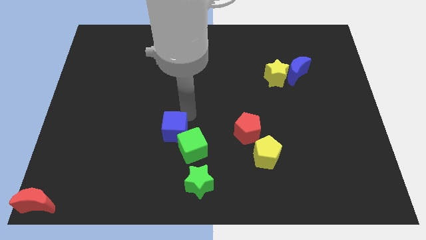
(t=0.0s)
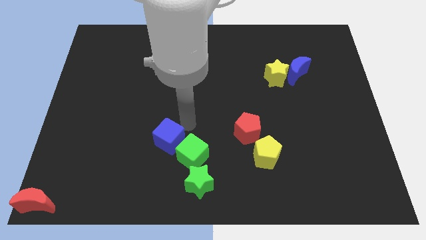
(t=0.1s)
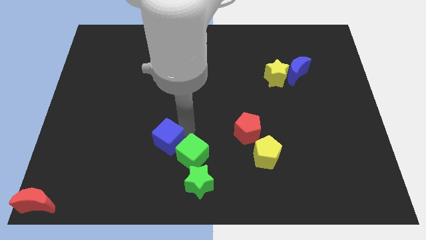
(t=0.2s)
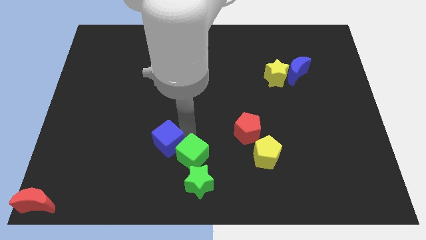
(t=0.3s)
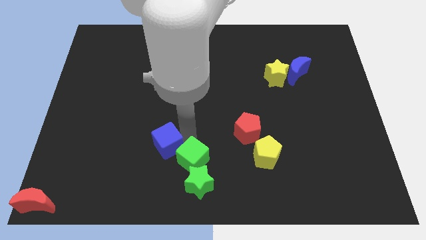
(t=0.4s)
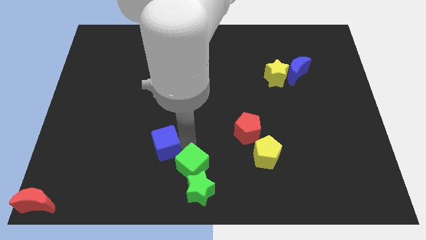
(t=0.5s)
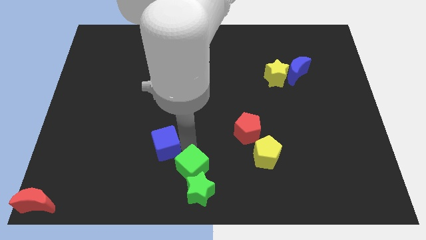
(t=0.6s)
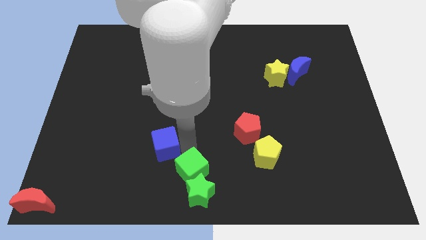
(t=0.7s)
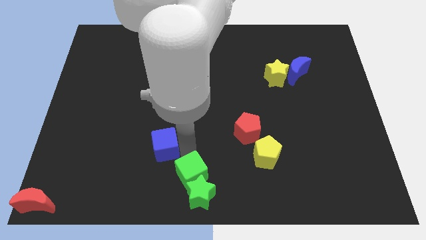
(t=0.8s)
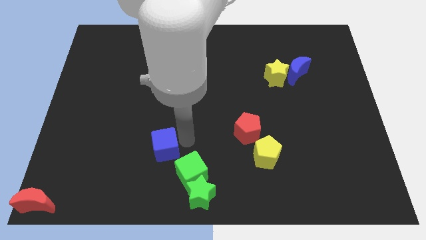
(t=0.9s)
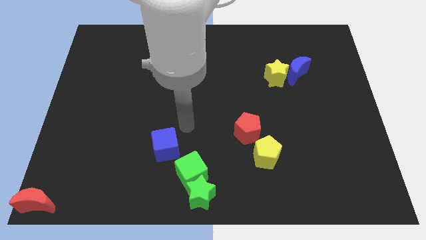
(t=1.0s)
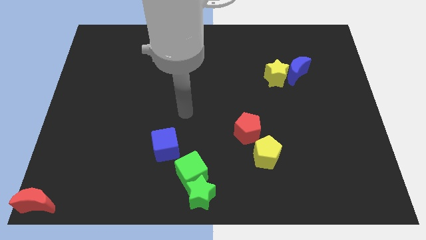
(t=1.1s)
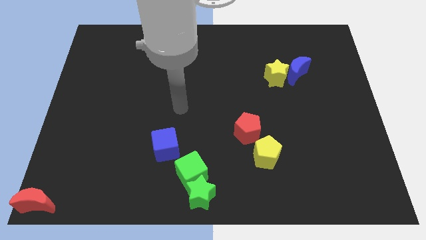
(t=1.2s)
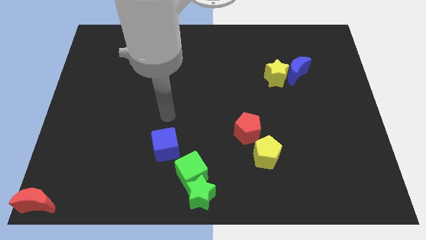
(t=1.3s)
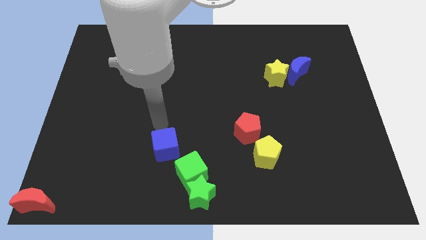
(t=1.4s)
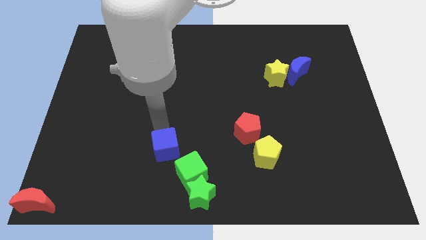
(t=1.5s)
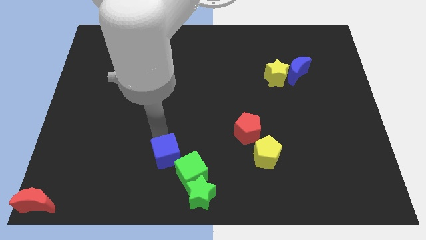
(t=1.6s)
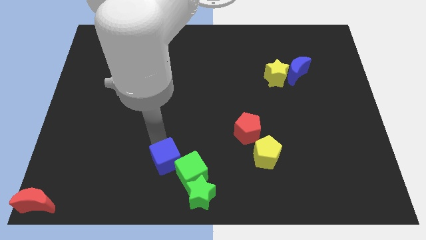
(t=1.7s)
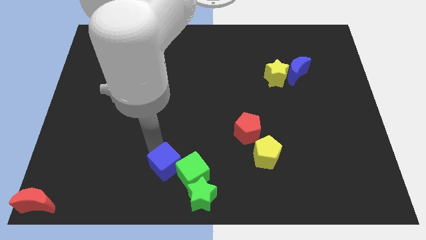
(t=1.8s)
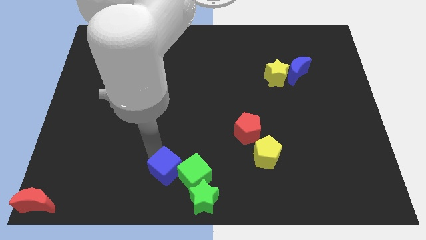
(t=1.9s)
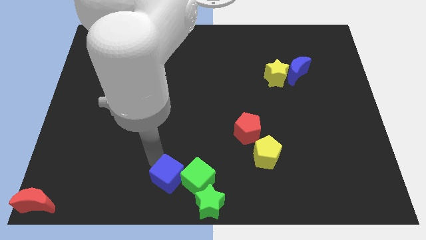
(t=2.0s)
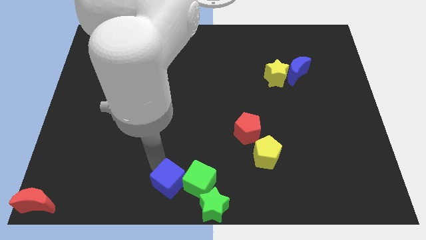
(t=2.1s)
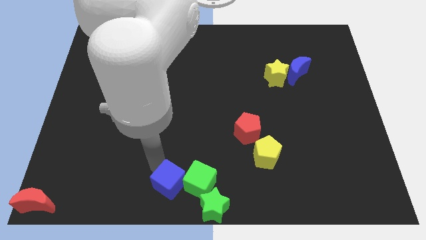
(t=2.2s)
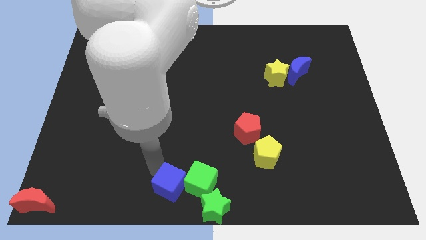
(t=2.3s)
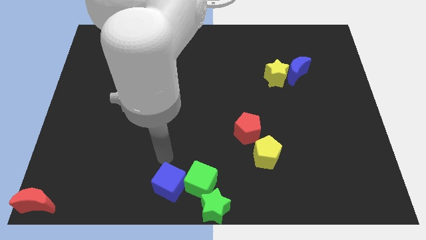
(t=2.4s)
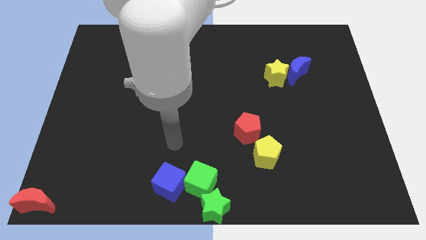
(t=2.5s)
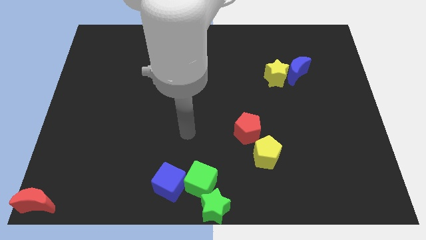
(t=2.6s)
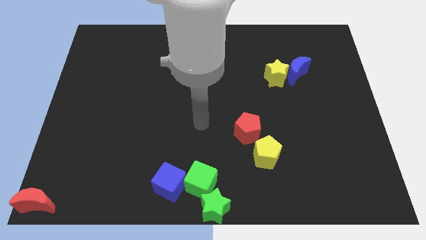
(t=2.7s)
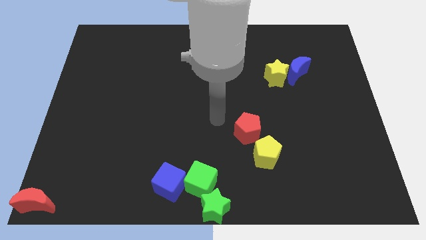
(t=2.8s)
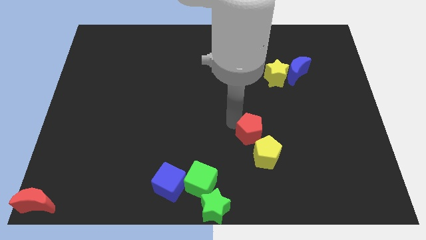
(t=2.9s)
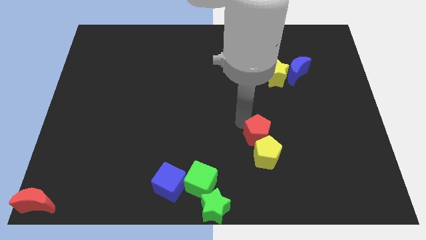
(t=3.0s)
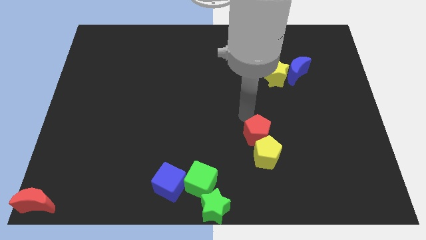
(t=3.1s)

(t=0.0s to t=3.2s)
move the blue cube to the bottom center

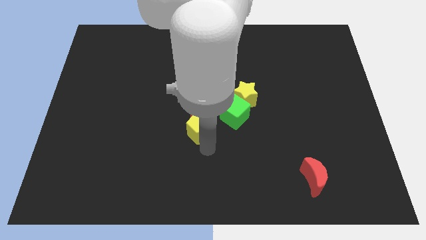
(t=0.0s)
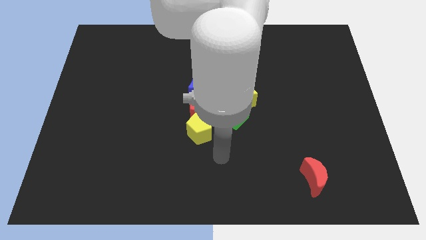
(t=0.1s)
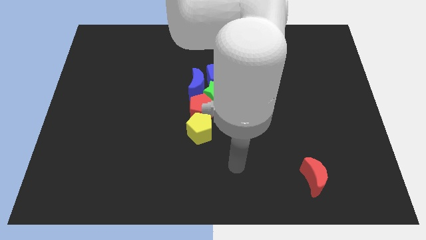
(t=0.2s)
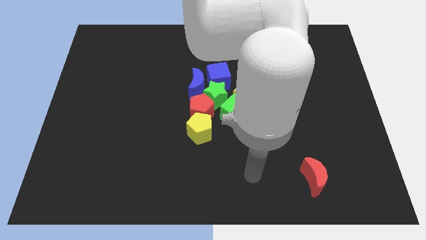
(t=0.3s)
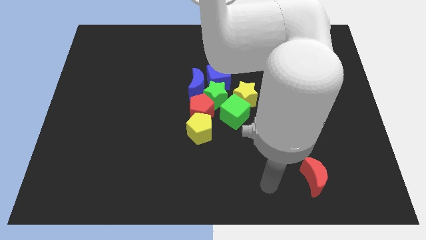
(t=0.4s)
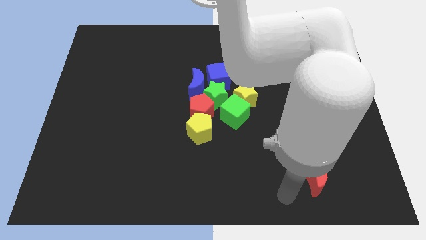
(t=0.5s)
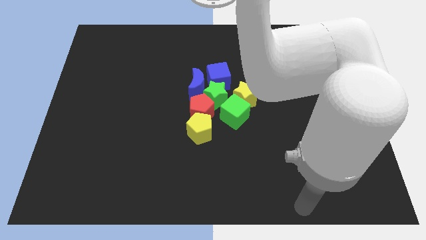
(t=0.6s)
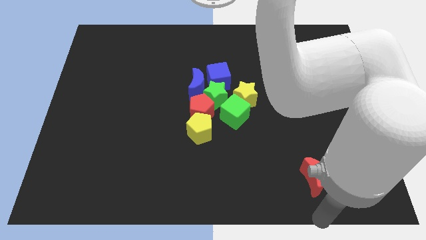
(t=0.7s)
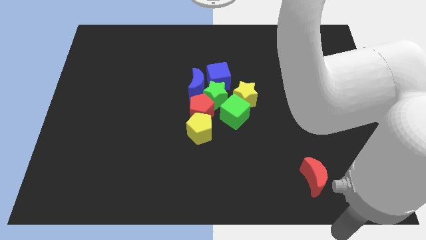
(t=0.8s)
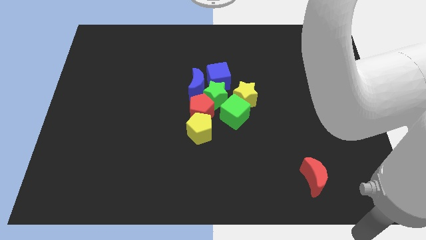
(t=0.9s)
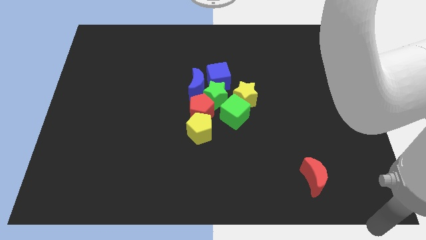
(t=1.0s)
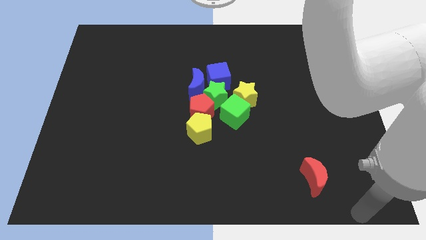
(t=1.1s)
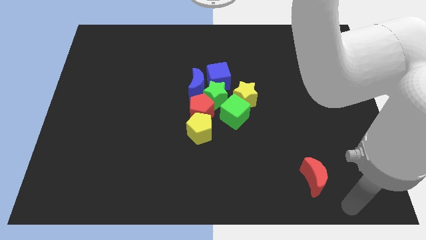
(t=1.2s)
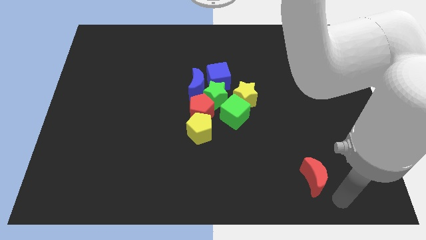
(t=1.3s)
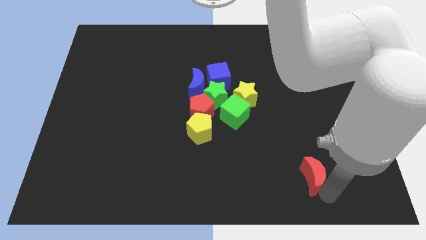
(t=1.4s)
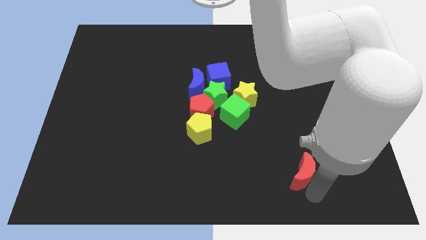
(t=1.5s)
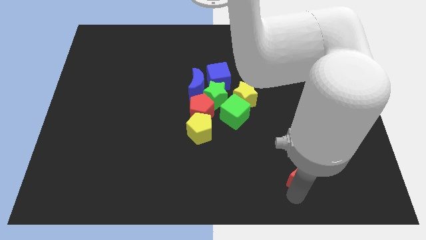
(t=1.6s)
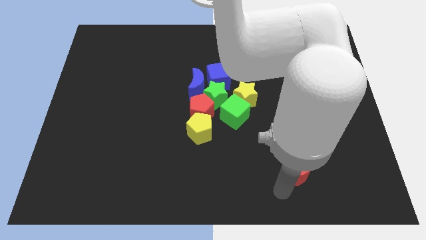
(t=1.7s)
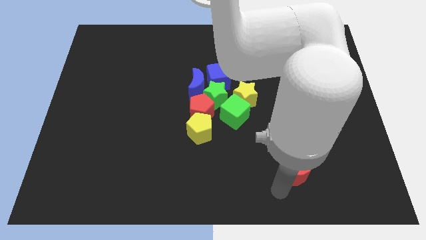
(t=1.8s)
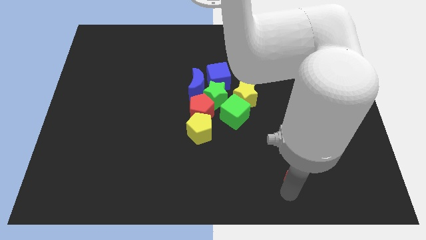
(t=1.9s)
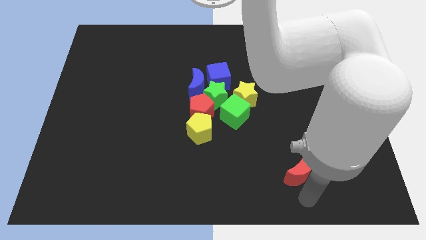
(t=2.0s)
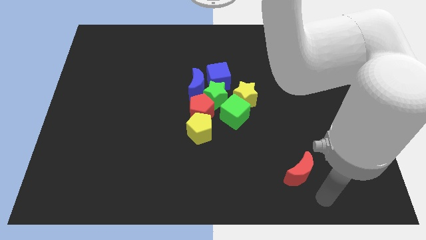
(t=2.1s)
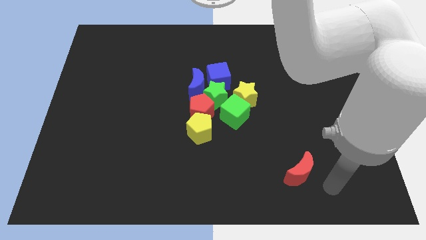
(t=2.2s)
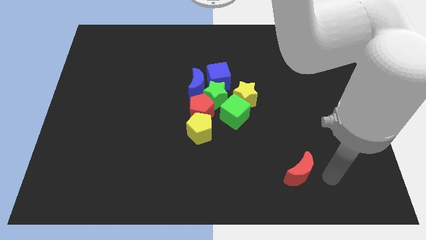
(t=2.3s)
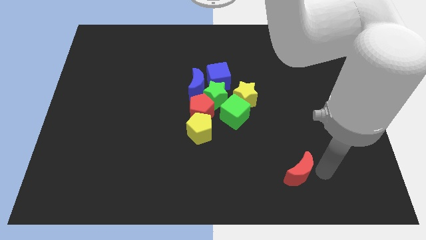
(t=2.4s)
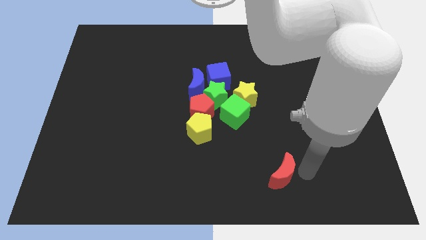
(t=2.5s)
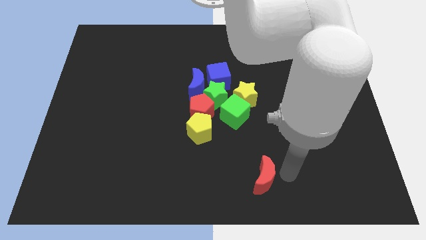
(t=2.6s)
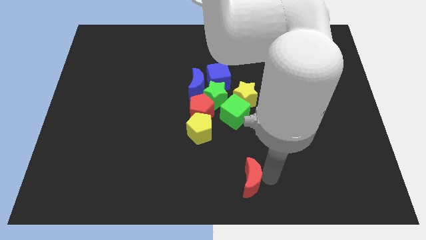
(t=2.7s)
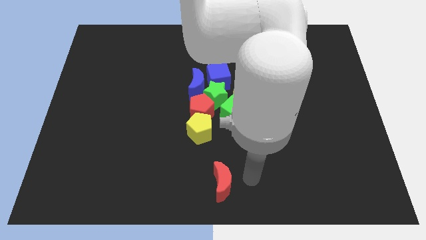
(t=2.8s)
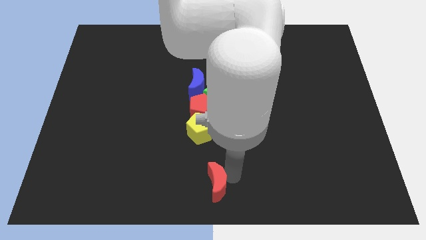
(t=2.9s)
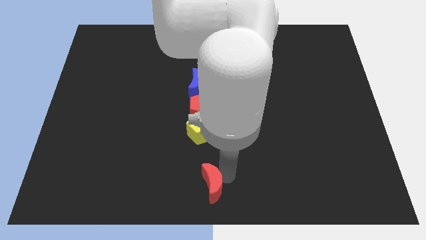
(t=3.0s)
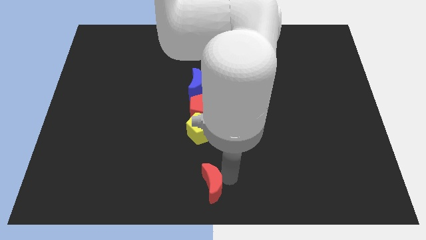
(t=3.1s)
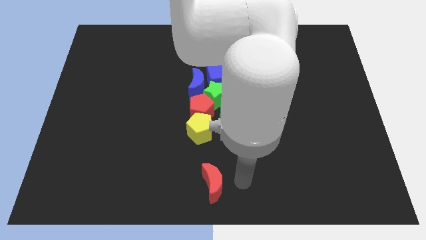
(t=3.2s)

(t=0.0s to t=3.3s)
place the red moon below the yellow pentagon

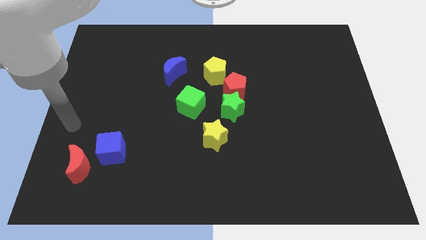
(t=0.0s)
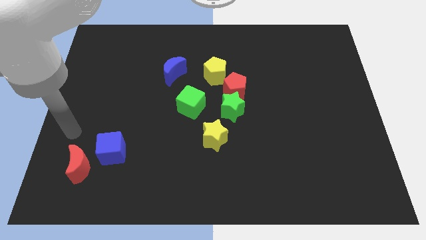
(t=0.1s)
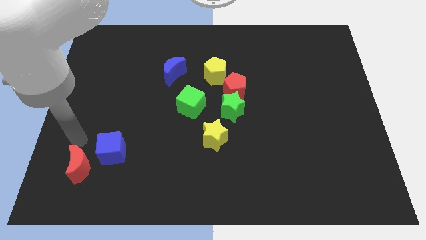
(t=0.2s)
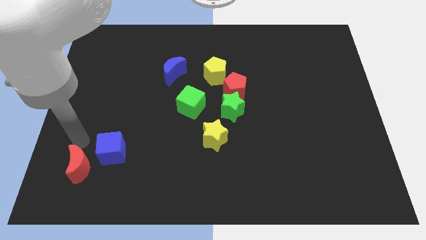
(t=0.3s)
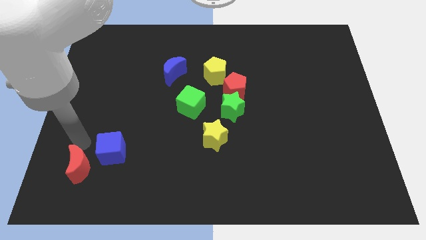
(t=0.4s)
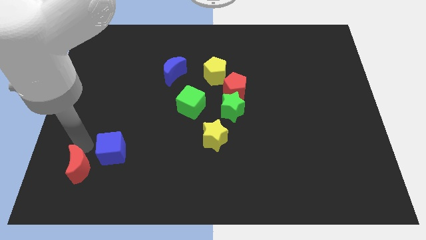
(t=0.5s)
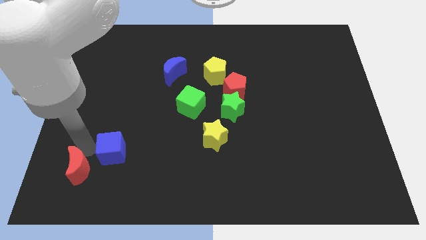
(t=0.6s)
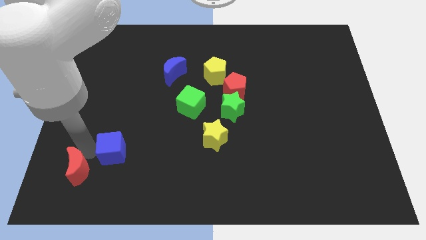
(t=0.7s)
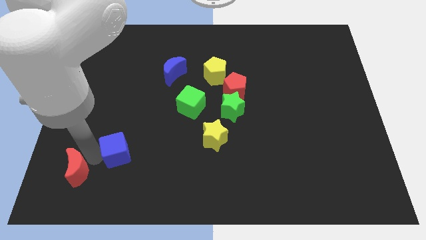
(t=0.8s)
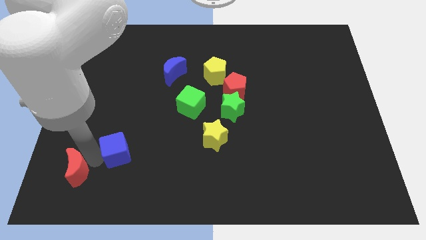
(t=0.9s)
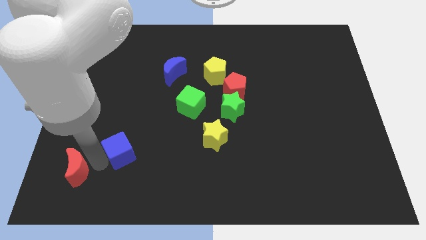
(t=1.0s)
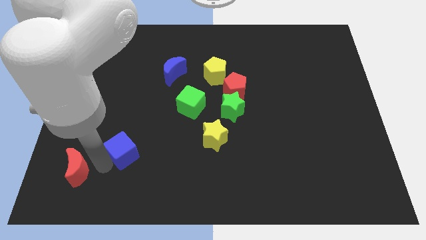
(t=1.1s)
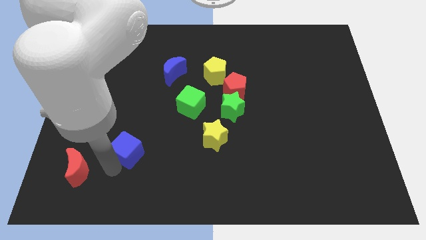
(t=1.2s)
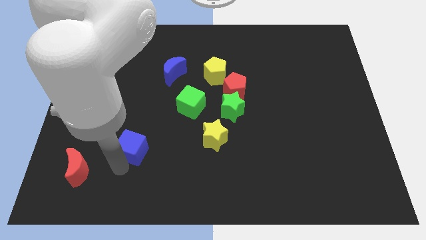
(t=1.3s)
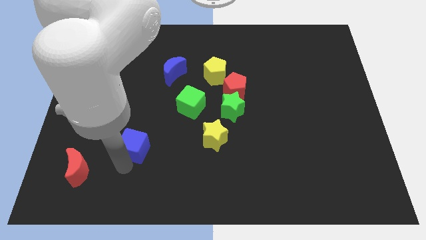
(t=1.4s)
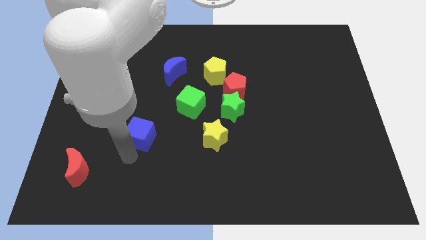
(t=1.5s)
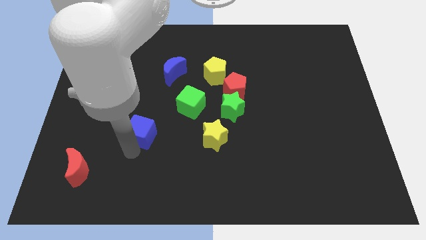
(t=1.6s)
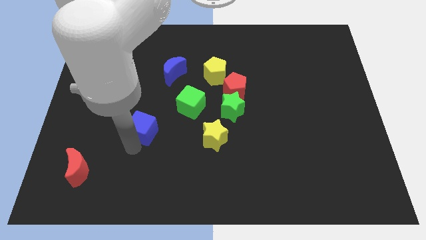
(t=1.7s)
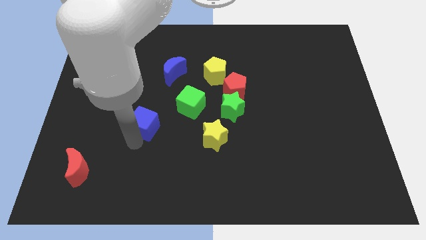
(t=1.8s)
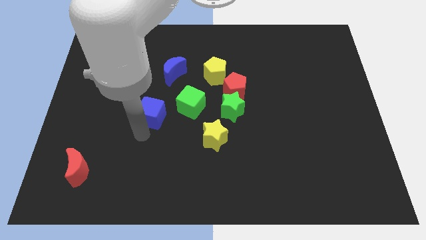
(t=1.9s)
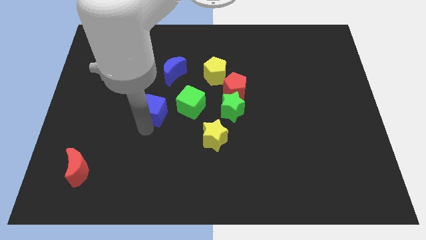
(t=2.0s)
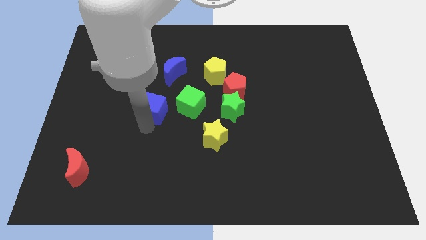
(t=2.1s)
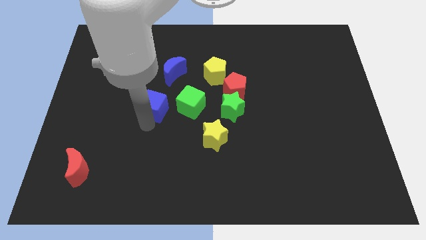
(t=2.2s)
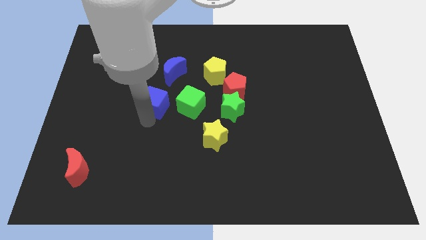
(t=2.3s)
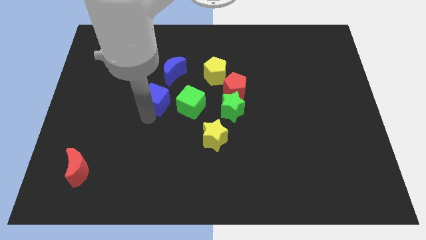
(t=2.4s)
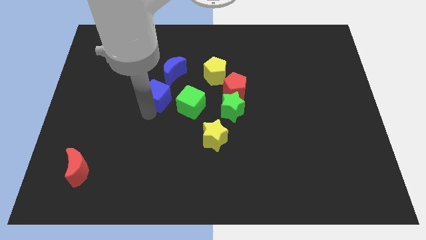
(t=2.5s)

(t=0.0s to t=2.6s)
push blue cube beside green cube
